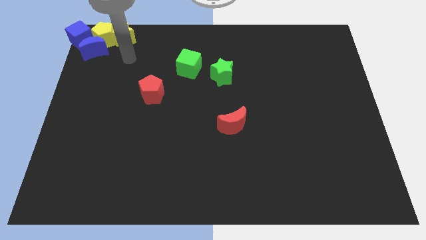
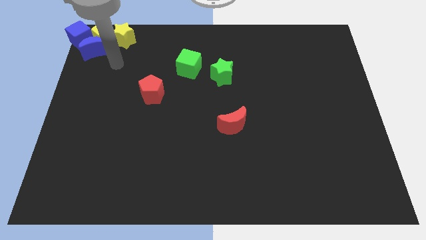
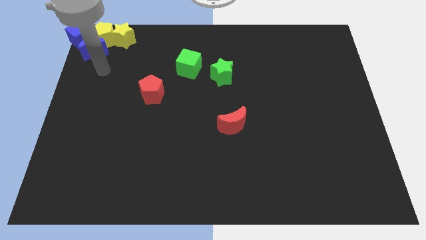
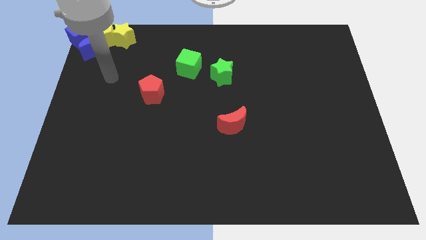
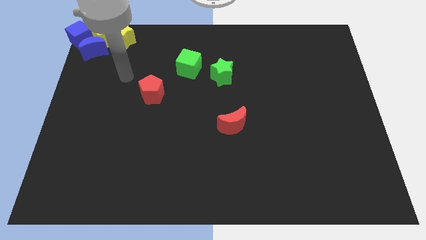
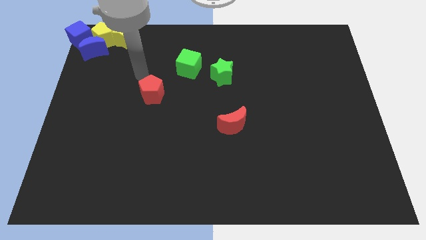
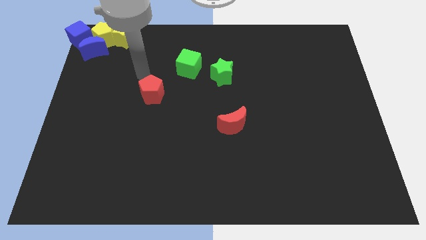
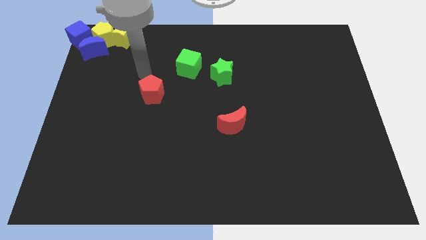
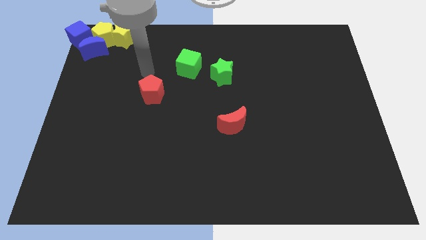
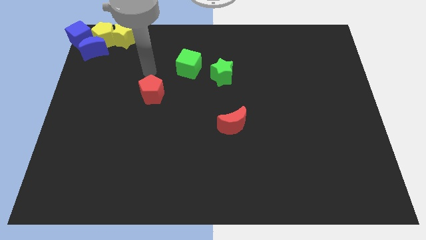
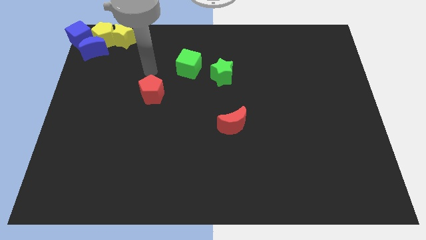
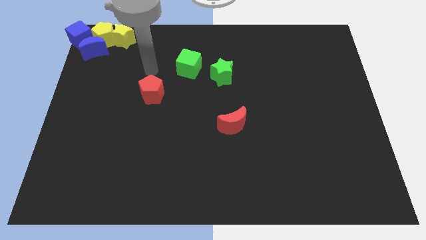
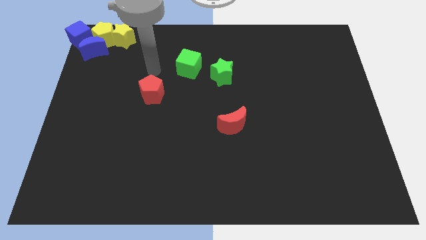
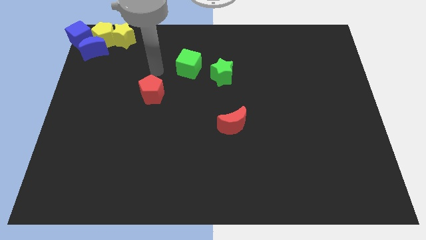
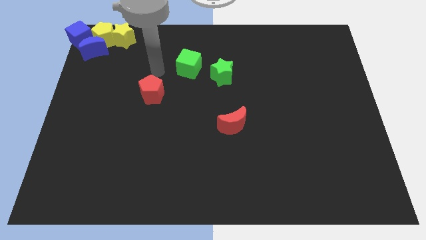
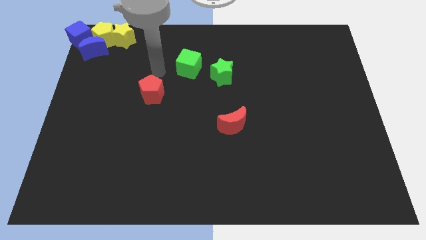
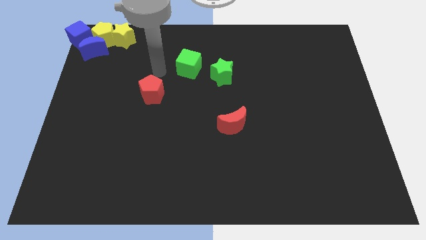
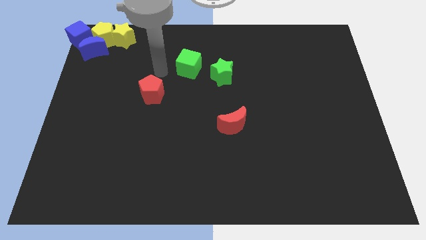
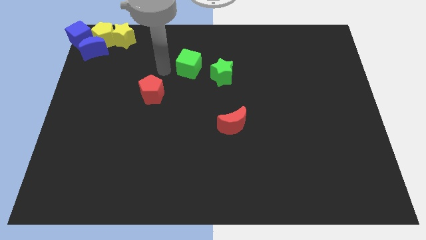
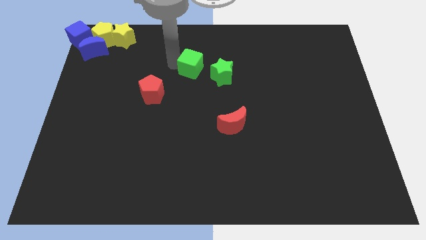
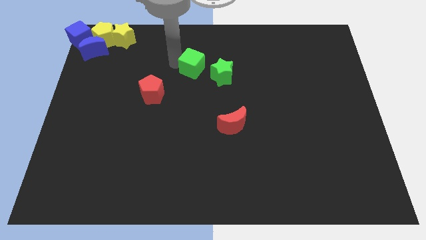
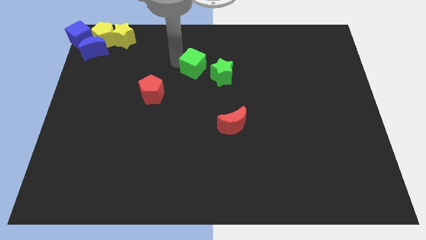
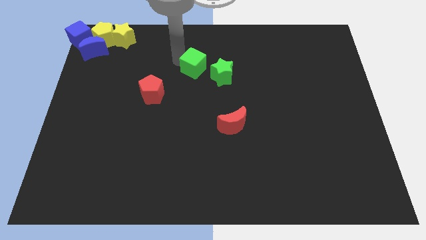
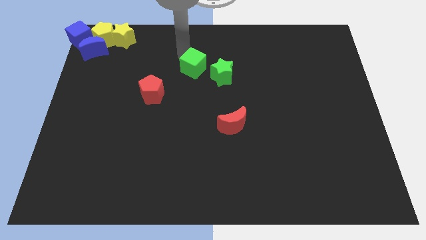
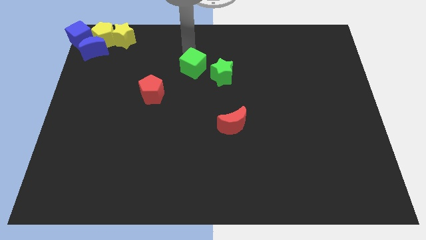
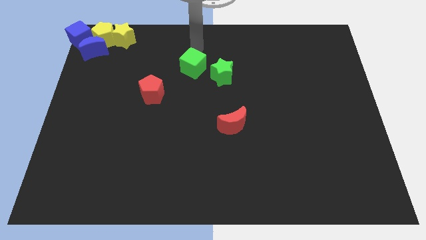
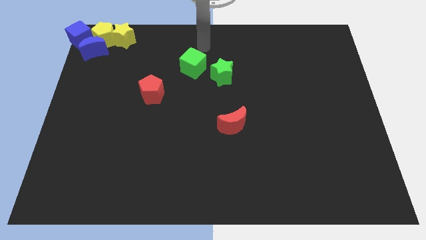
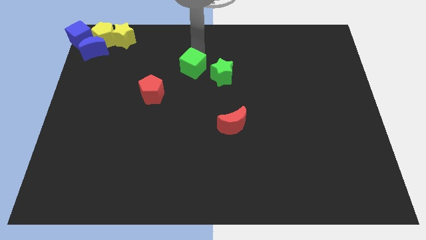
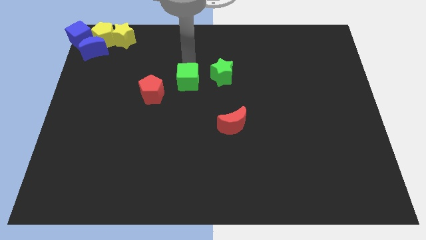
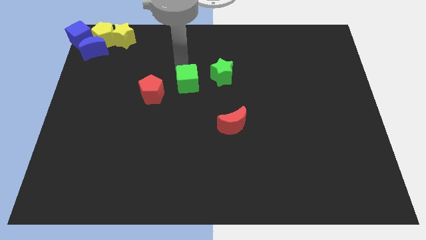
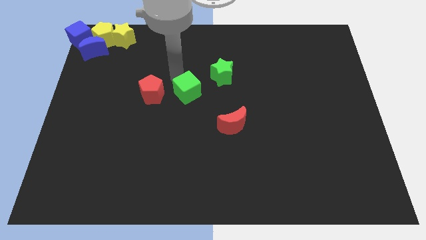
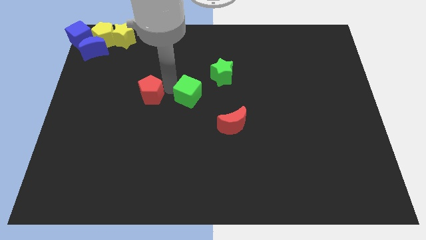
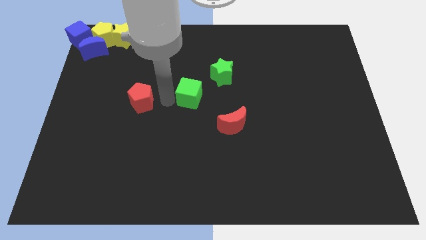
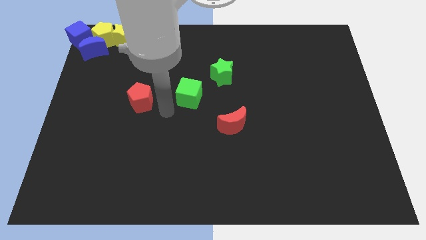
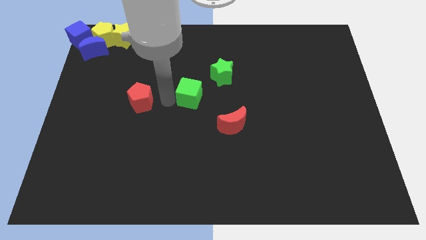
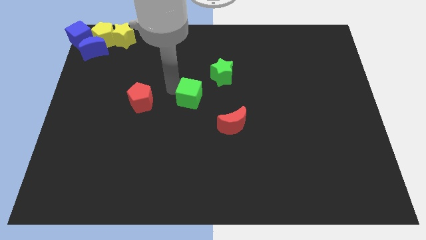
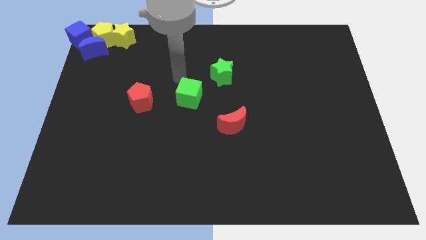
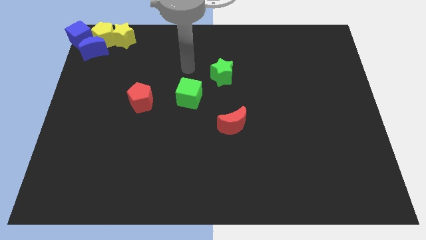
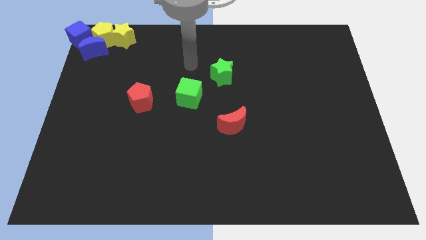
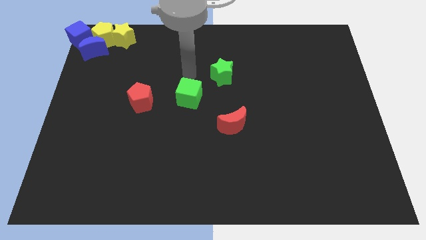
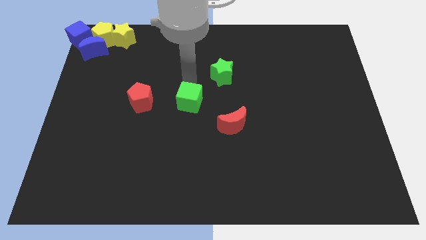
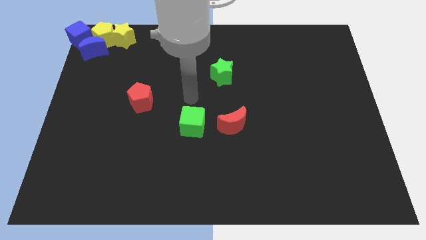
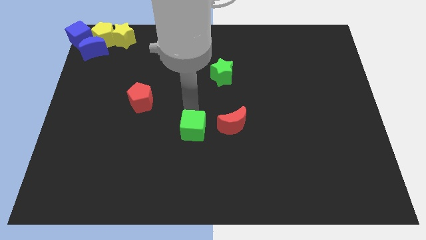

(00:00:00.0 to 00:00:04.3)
place the green cube left to the red moon

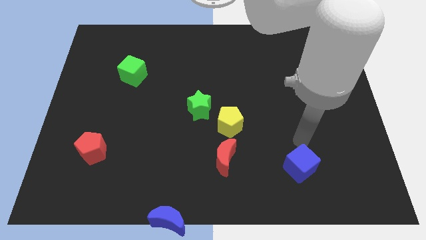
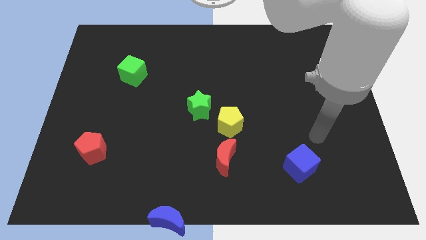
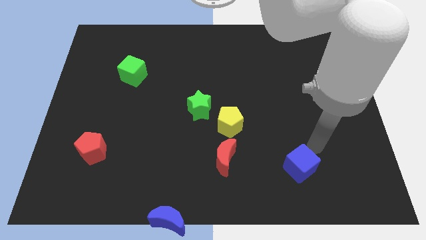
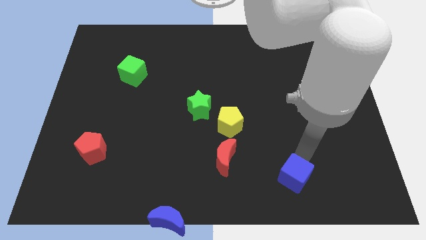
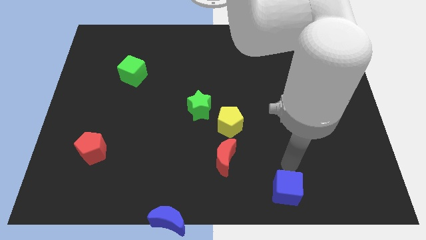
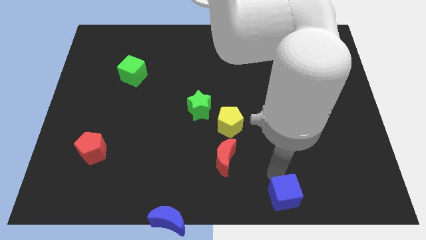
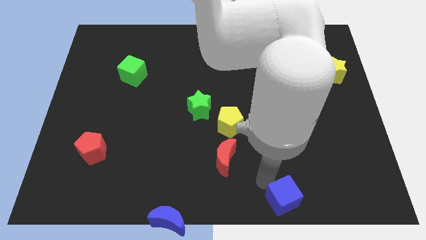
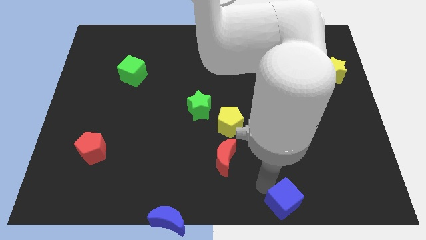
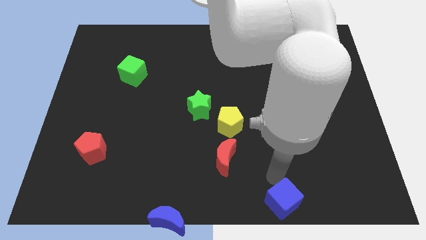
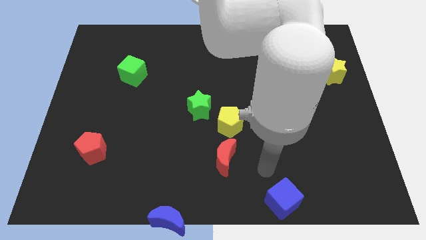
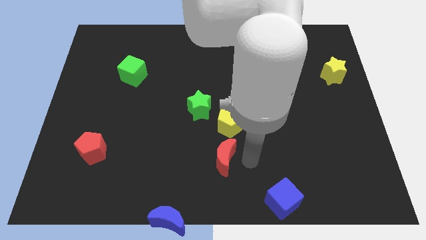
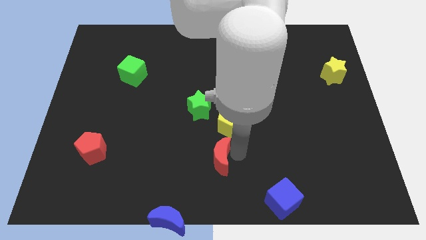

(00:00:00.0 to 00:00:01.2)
push the blue cube to the downward

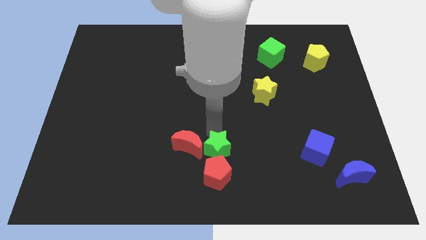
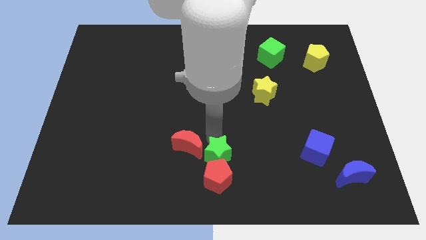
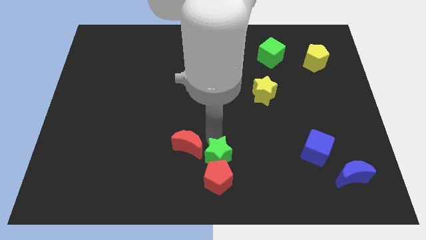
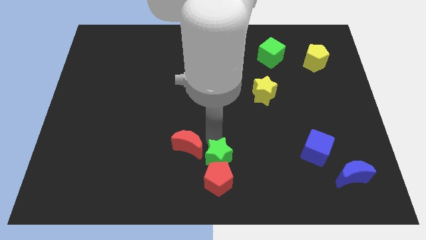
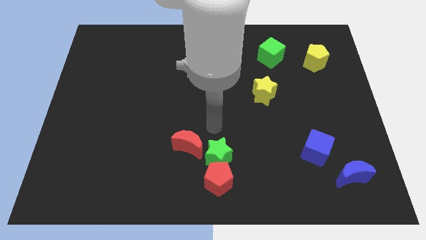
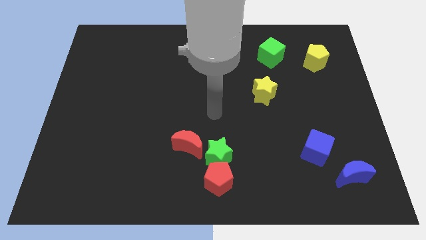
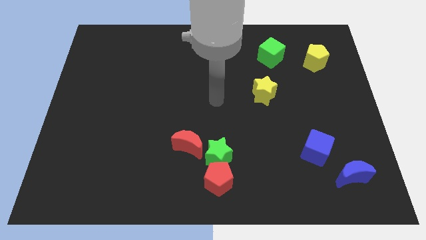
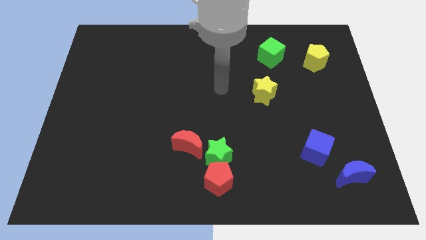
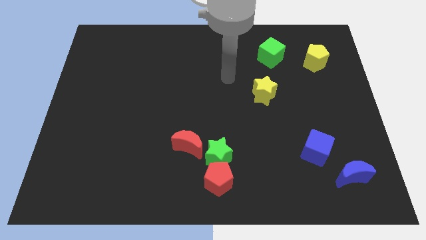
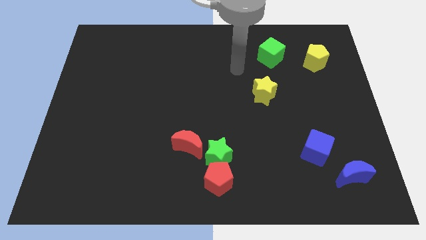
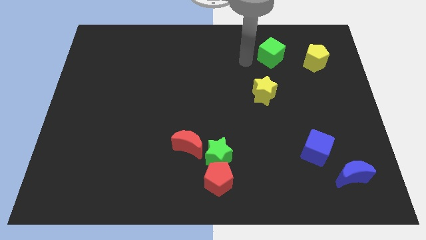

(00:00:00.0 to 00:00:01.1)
move the green star into the top of red pentagon

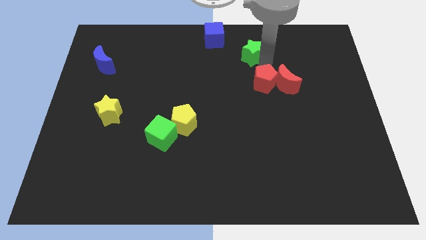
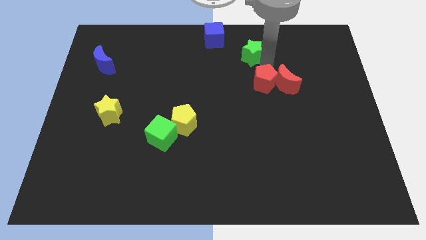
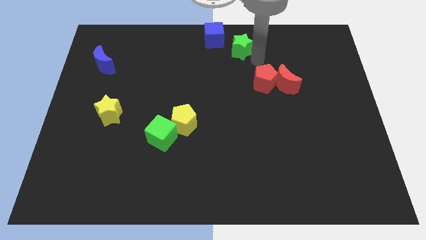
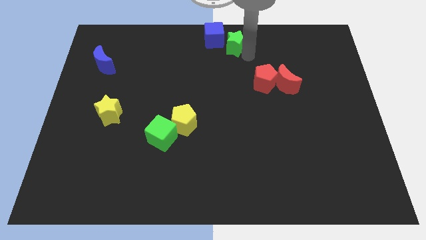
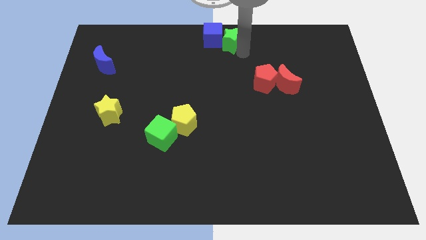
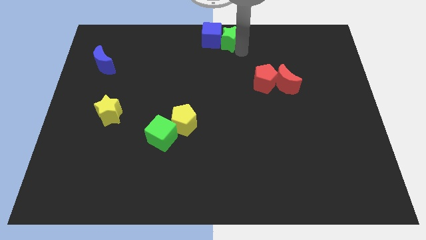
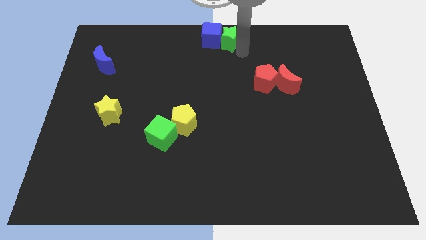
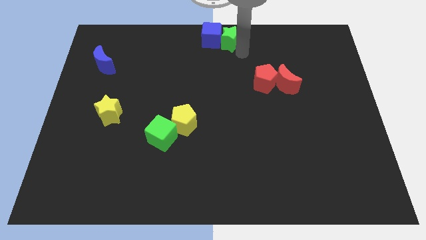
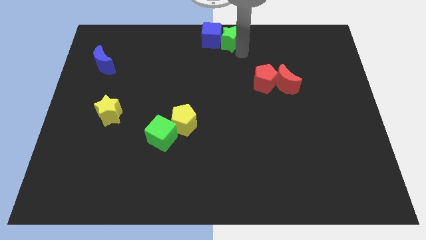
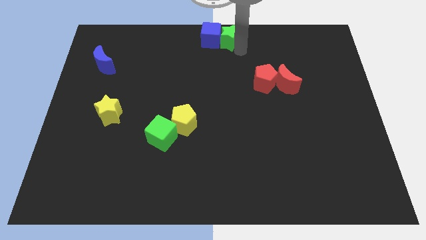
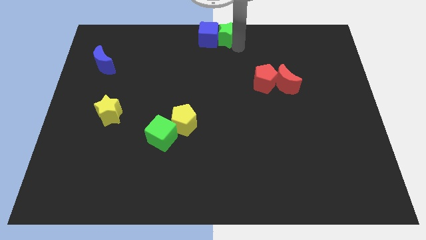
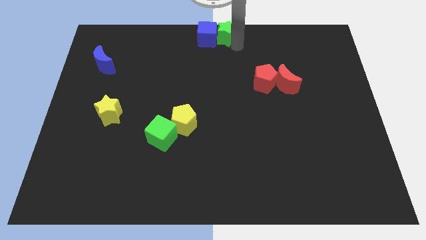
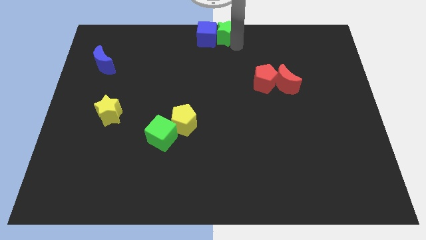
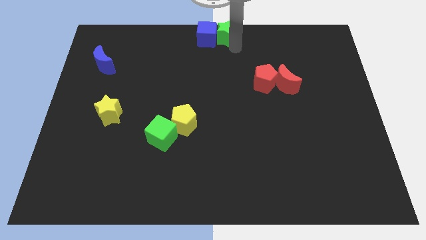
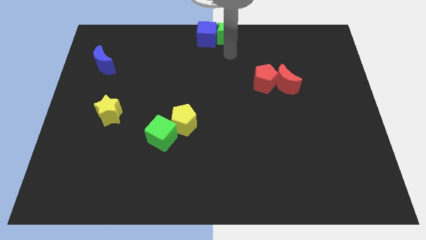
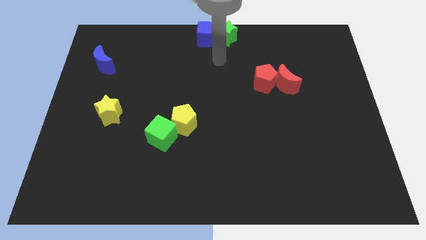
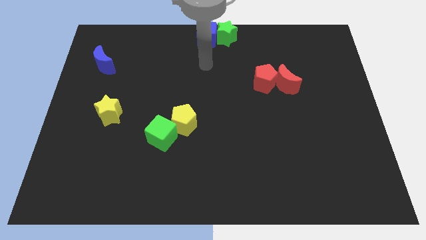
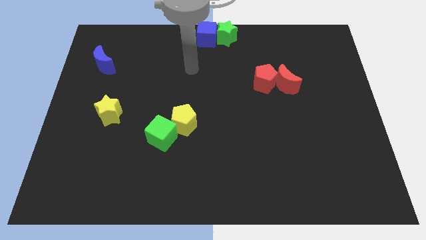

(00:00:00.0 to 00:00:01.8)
place the green star on the right side of the blue cube

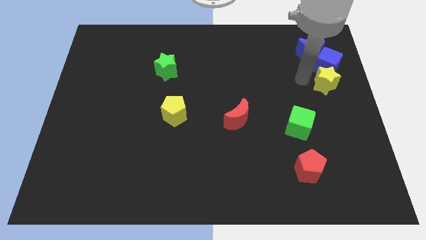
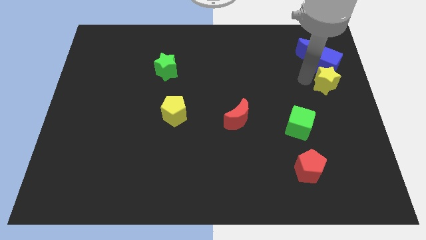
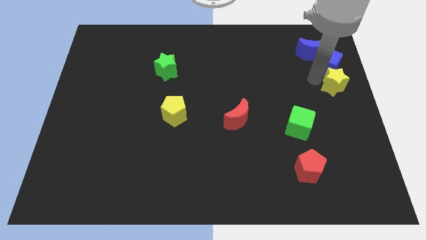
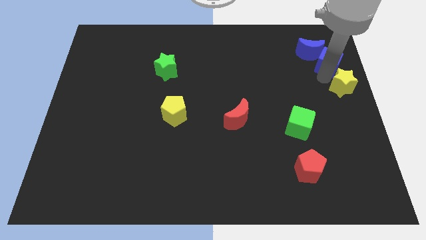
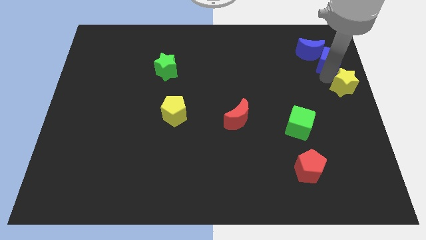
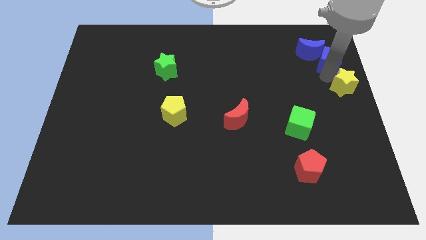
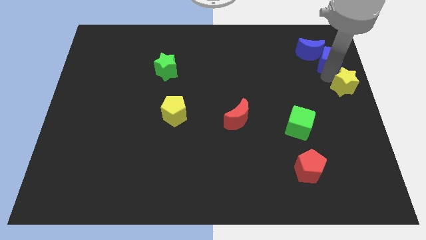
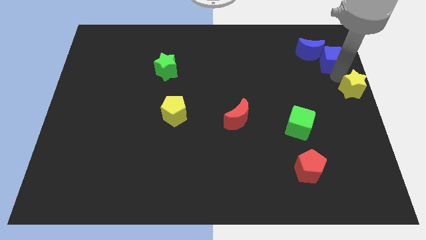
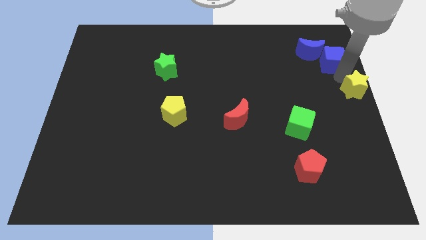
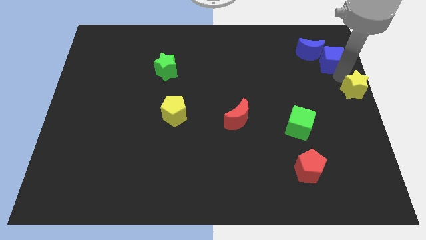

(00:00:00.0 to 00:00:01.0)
push yellow star to the right center of the board
